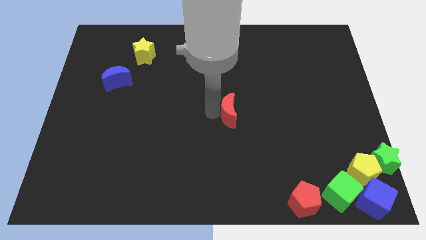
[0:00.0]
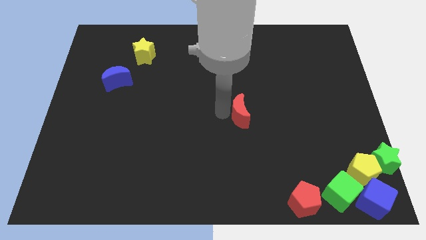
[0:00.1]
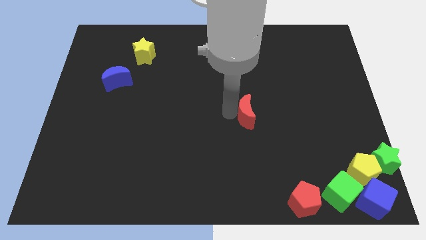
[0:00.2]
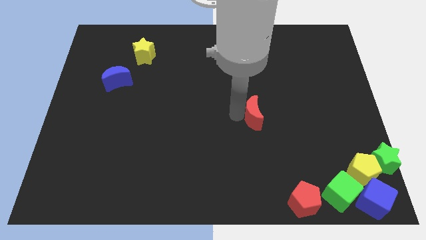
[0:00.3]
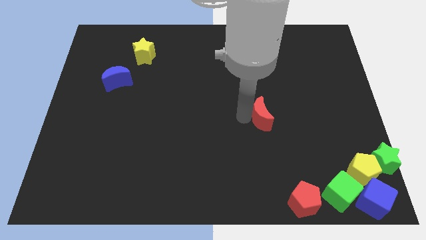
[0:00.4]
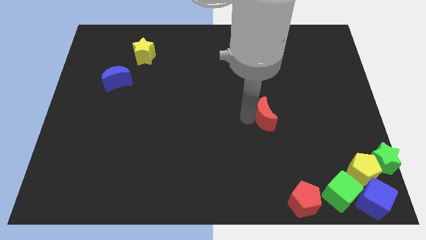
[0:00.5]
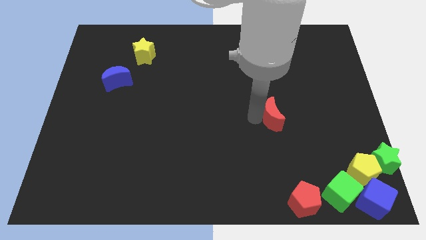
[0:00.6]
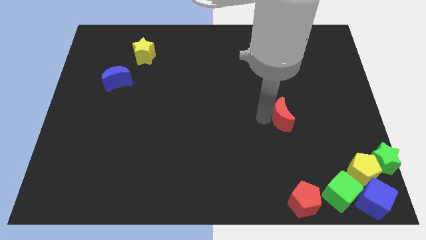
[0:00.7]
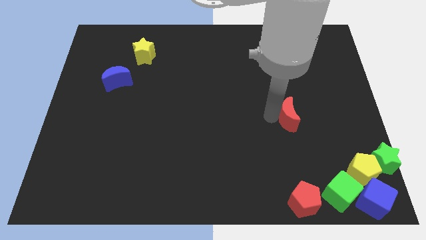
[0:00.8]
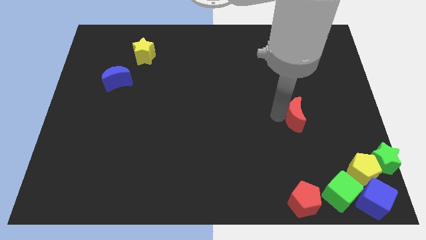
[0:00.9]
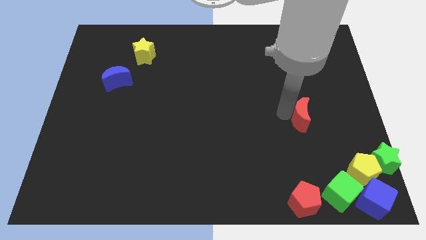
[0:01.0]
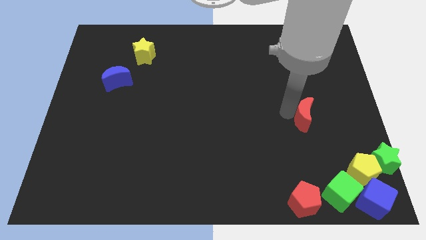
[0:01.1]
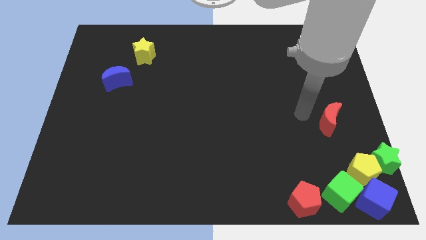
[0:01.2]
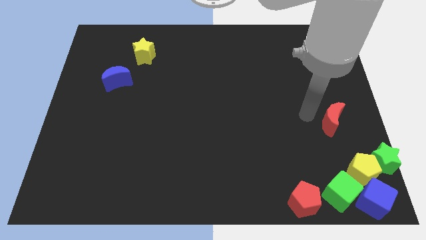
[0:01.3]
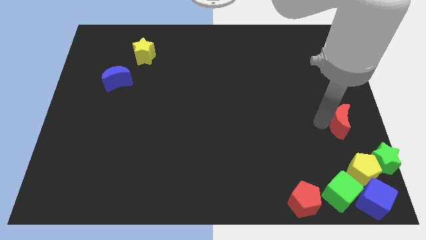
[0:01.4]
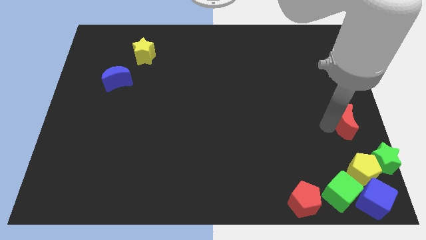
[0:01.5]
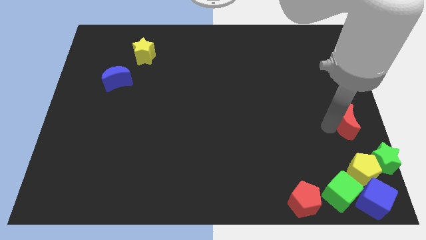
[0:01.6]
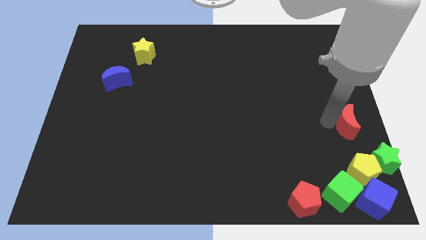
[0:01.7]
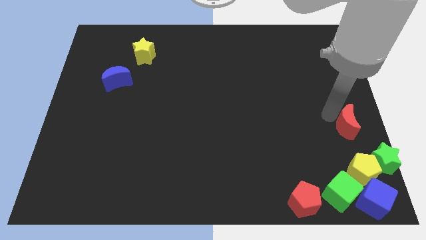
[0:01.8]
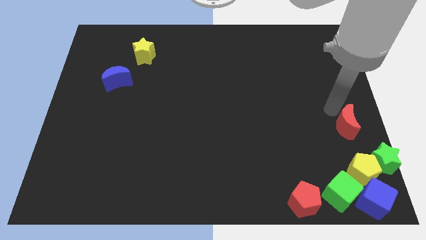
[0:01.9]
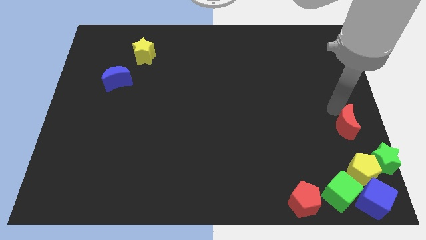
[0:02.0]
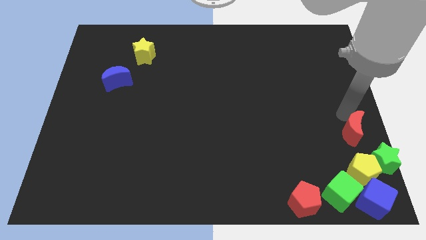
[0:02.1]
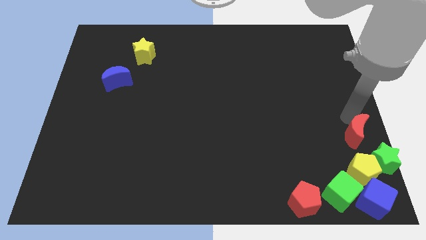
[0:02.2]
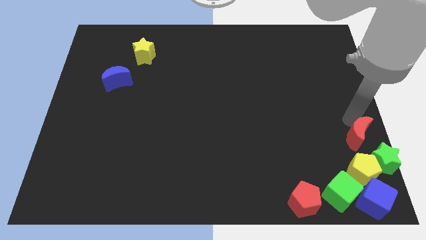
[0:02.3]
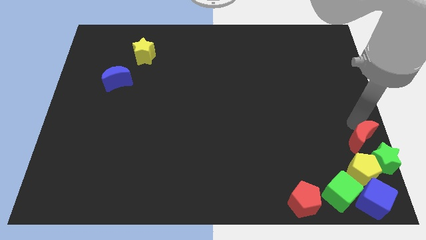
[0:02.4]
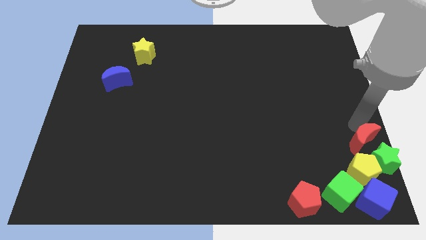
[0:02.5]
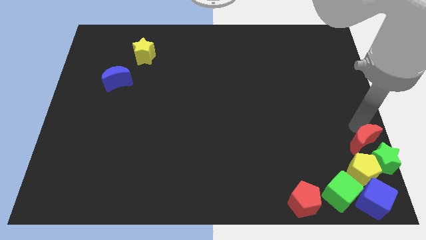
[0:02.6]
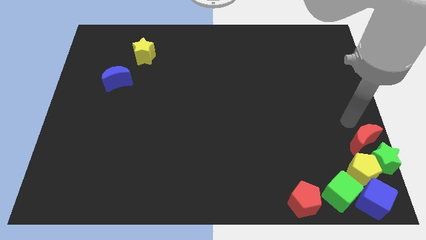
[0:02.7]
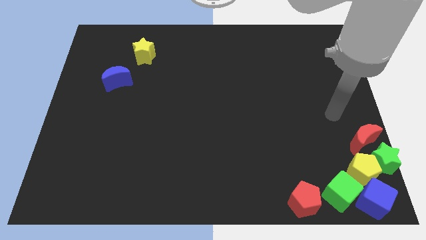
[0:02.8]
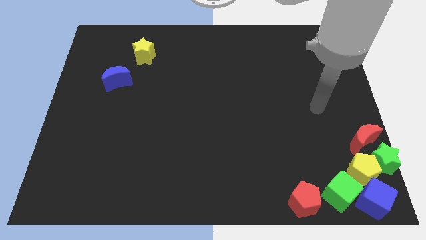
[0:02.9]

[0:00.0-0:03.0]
move the red moon to the top side of the green star

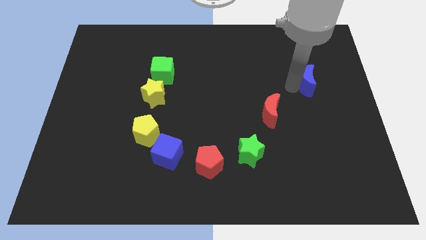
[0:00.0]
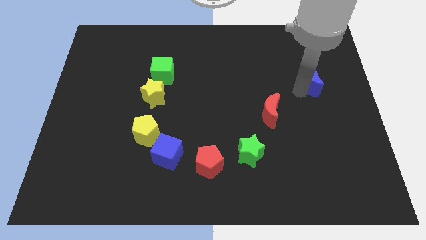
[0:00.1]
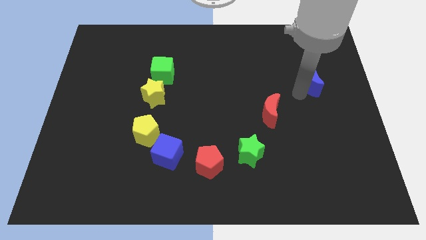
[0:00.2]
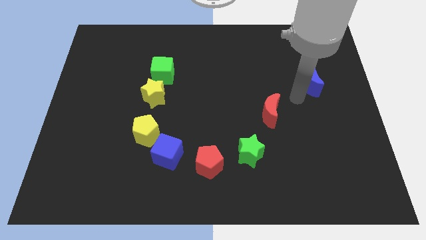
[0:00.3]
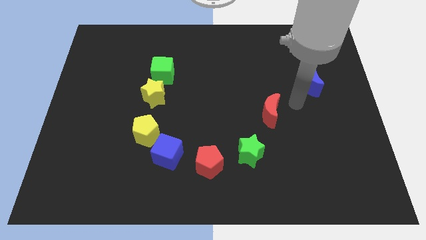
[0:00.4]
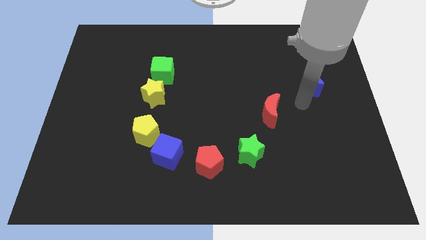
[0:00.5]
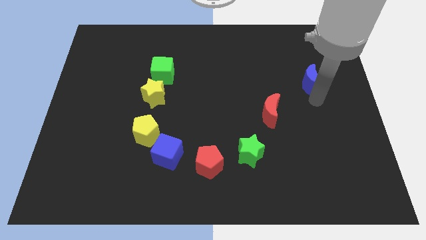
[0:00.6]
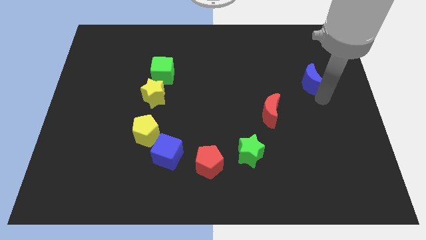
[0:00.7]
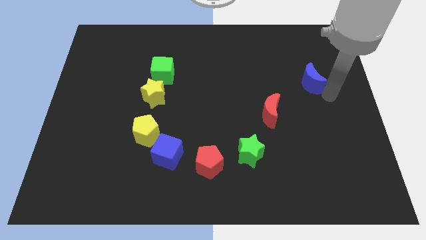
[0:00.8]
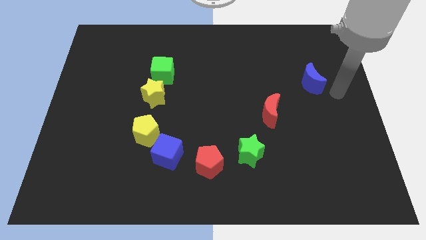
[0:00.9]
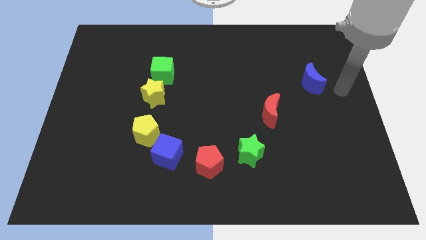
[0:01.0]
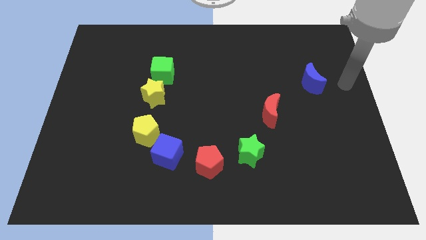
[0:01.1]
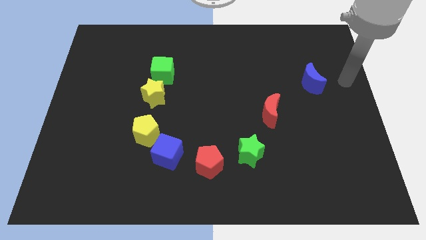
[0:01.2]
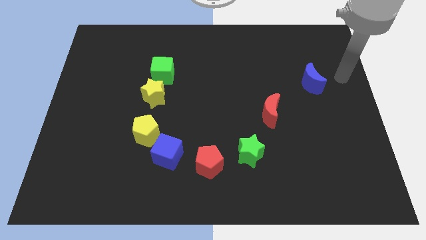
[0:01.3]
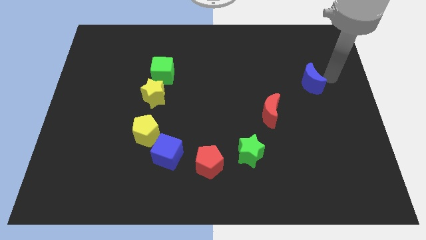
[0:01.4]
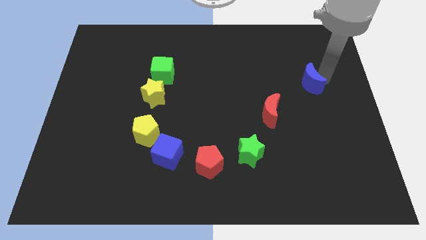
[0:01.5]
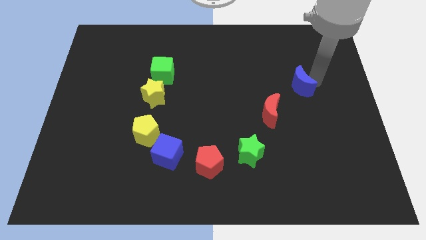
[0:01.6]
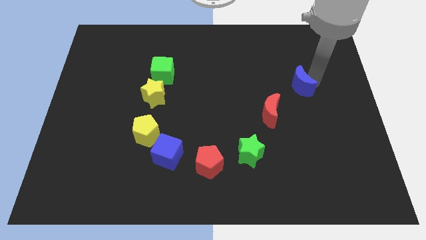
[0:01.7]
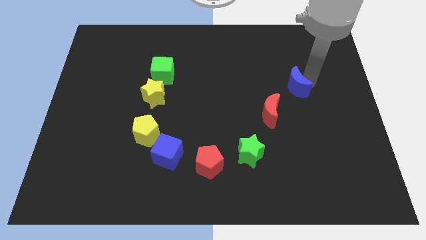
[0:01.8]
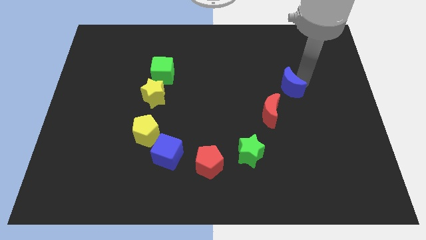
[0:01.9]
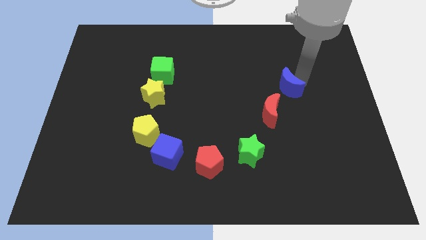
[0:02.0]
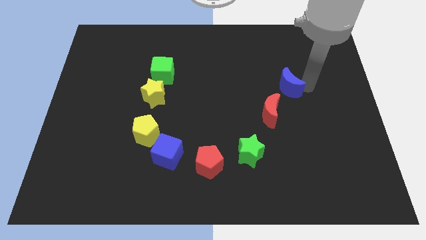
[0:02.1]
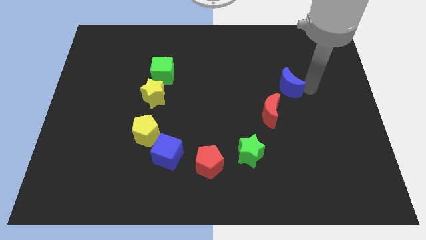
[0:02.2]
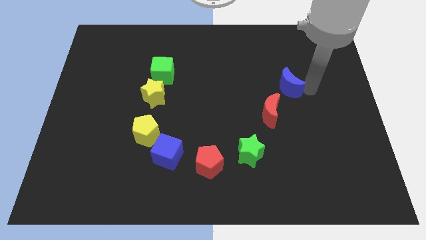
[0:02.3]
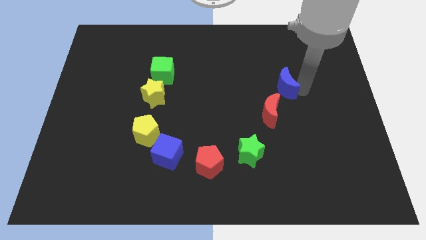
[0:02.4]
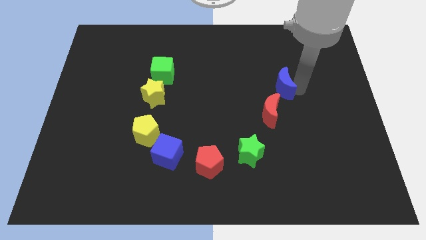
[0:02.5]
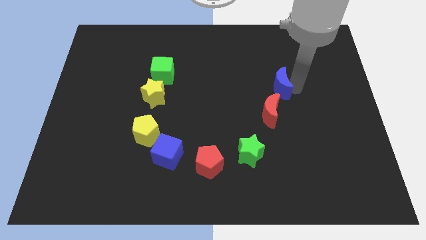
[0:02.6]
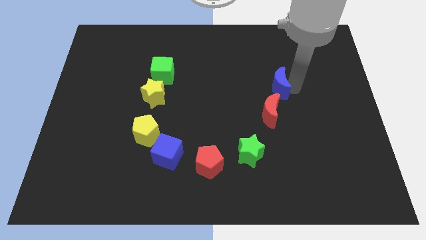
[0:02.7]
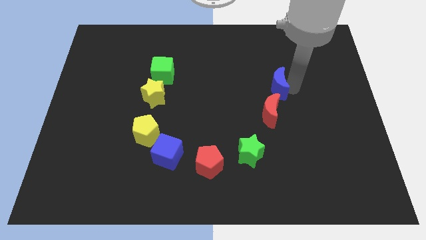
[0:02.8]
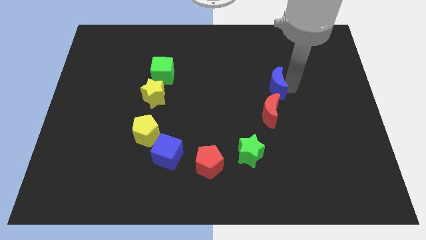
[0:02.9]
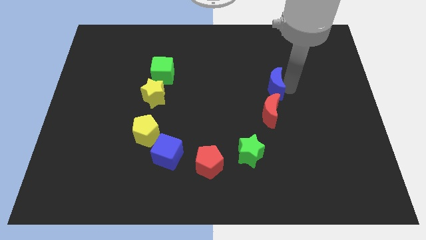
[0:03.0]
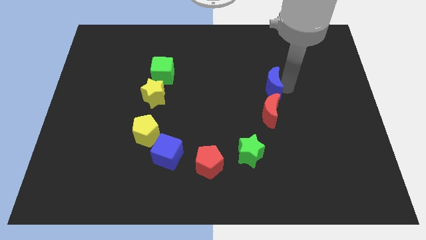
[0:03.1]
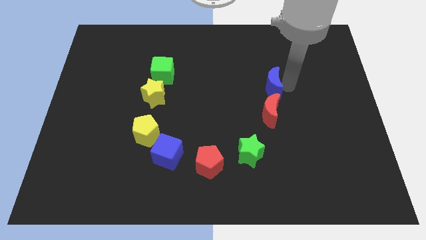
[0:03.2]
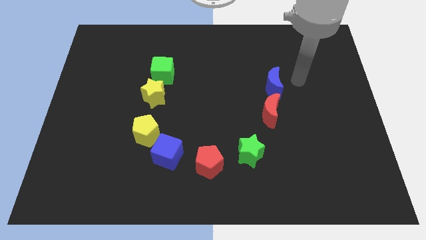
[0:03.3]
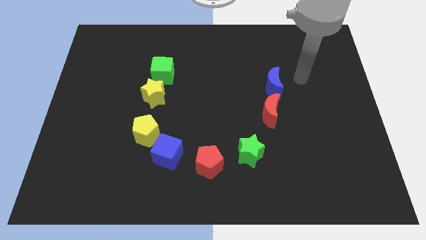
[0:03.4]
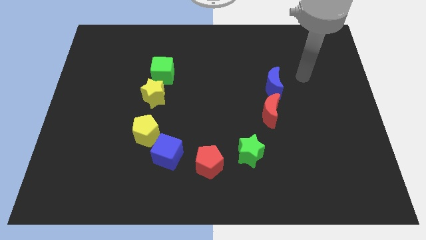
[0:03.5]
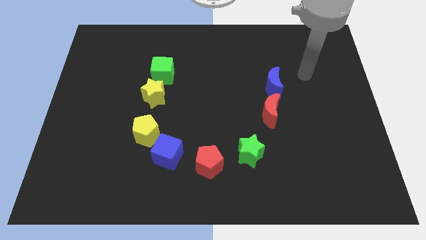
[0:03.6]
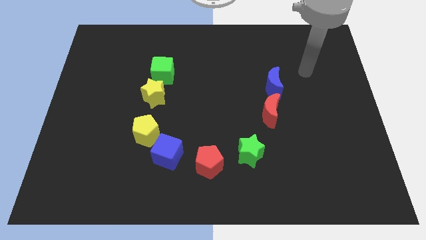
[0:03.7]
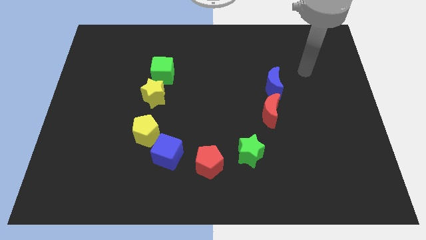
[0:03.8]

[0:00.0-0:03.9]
put the blue moon on the top side of the red moon

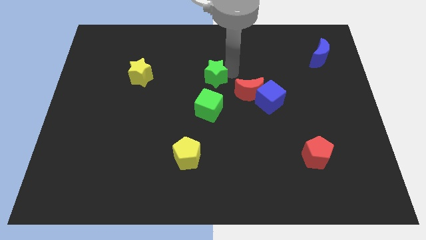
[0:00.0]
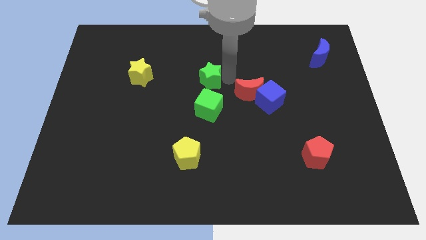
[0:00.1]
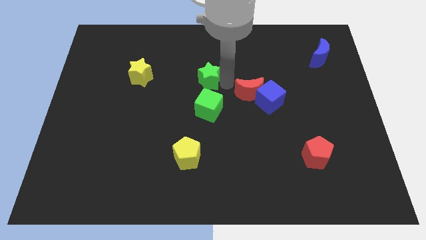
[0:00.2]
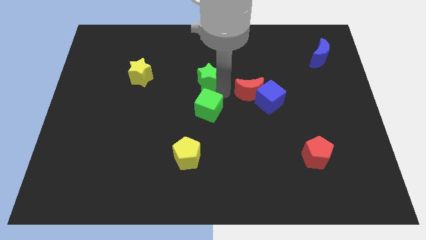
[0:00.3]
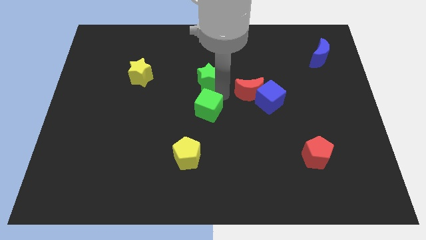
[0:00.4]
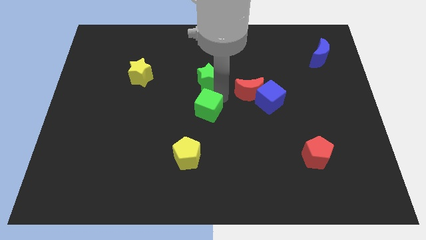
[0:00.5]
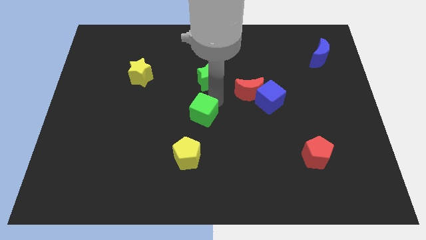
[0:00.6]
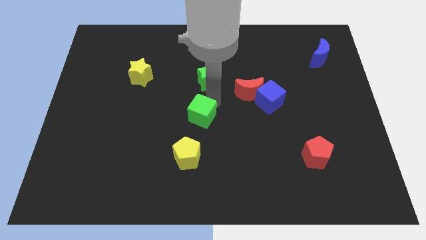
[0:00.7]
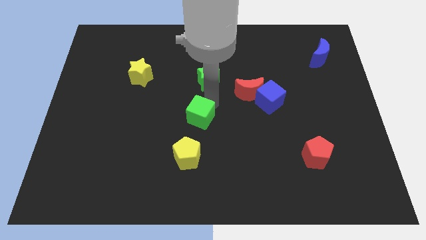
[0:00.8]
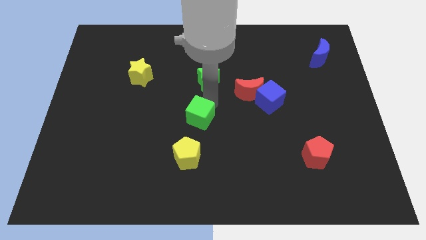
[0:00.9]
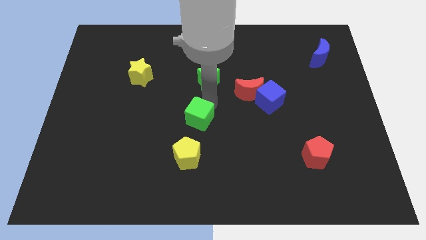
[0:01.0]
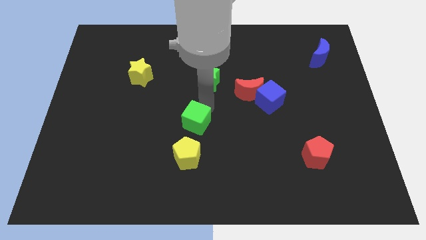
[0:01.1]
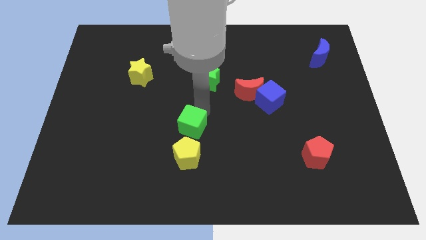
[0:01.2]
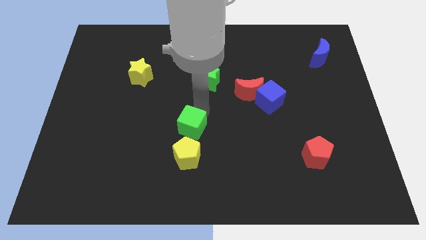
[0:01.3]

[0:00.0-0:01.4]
move green cube above yellow pentagon

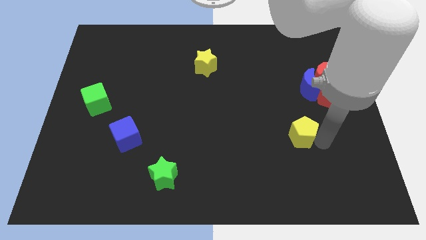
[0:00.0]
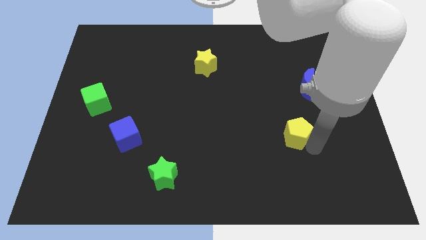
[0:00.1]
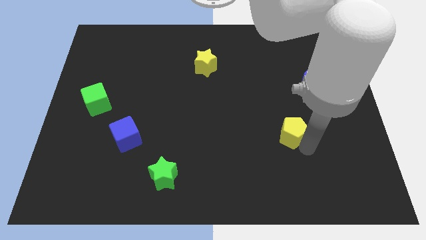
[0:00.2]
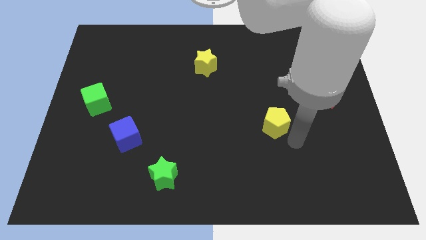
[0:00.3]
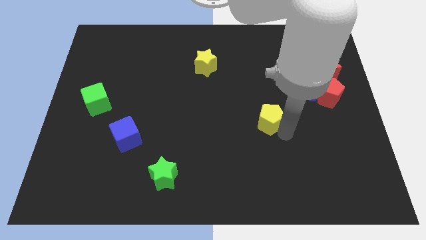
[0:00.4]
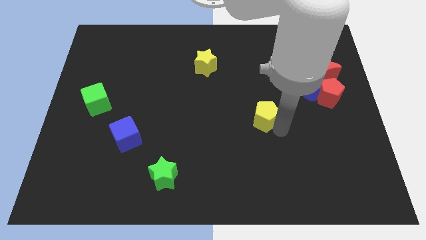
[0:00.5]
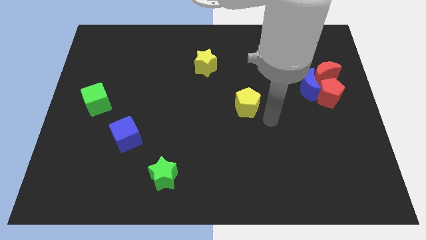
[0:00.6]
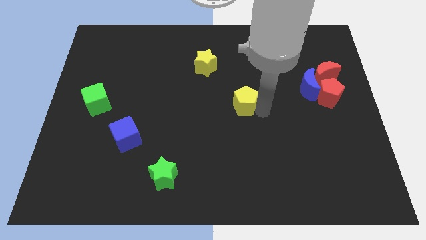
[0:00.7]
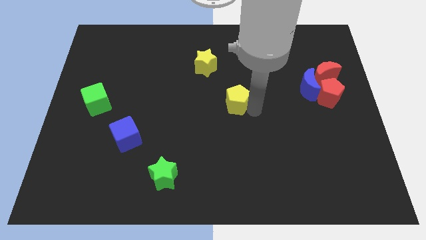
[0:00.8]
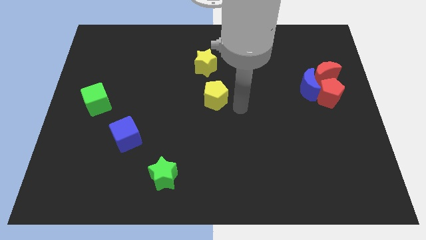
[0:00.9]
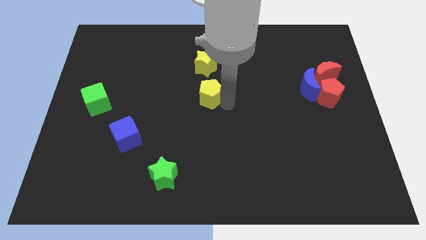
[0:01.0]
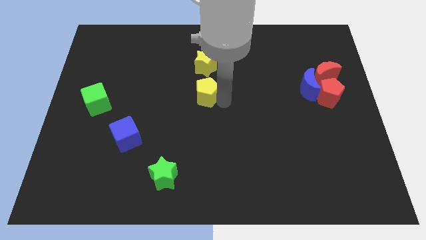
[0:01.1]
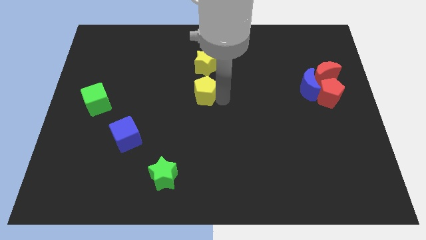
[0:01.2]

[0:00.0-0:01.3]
place yellow pentagon to the bottom of yellow star
